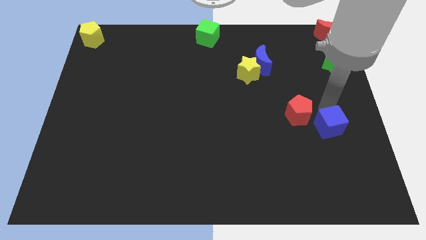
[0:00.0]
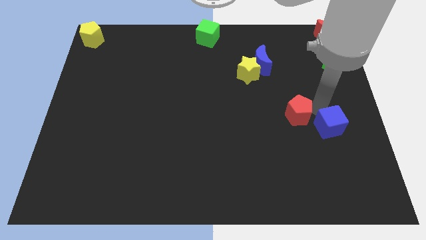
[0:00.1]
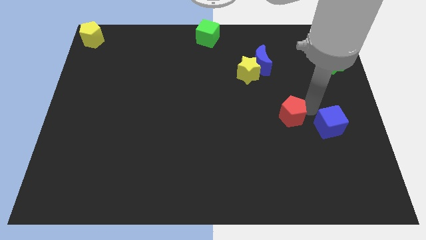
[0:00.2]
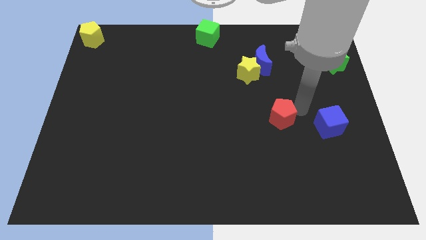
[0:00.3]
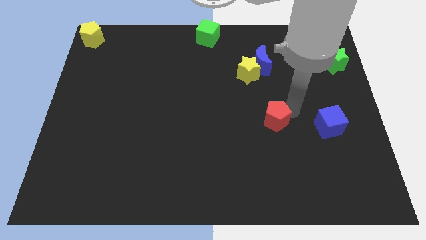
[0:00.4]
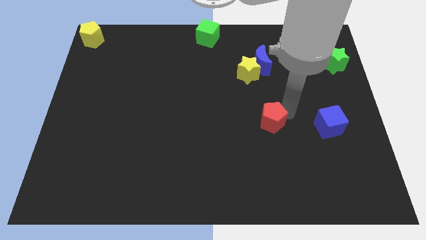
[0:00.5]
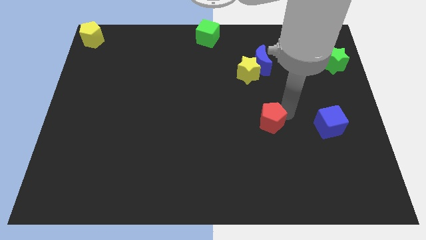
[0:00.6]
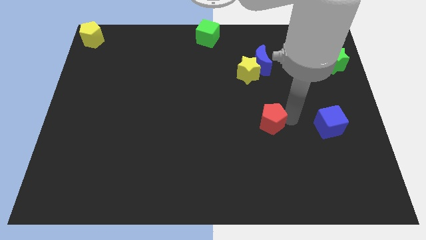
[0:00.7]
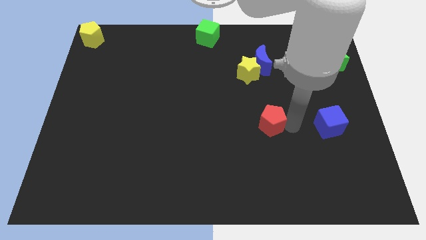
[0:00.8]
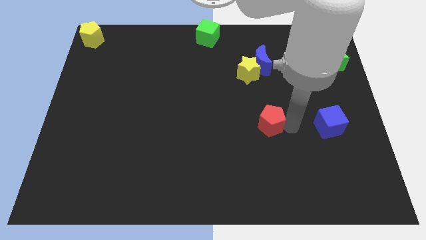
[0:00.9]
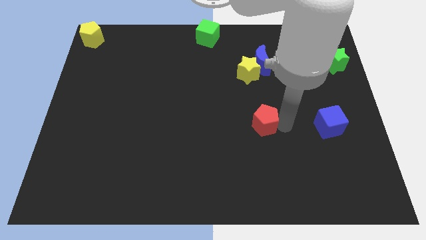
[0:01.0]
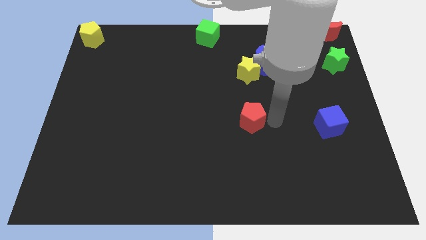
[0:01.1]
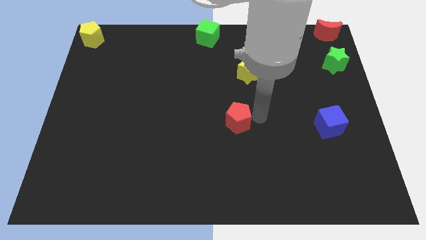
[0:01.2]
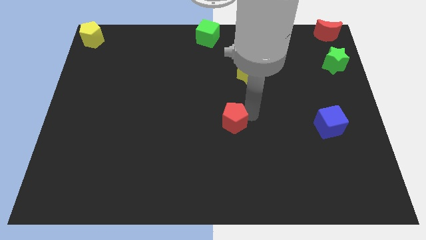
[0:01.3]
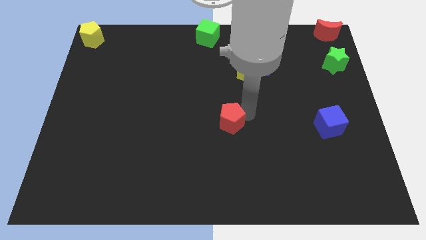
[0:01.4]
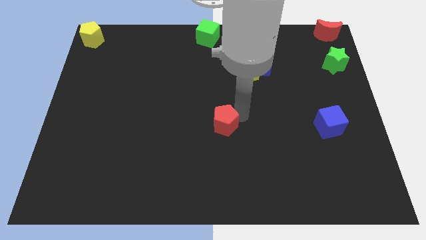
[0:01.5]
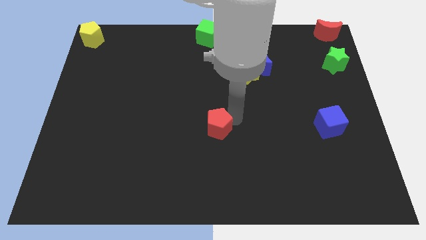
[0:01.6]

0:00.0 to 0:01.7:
place the red pentagon below the yellow star

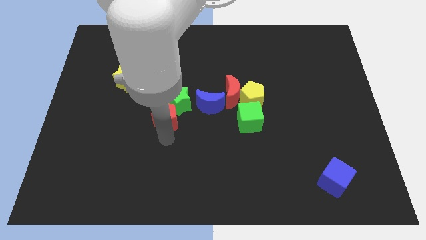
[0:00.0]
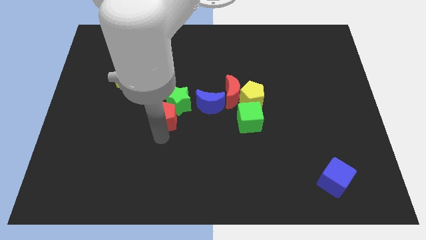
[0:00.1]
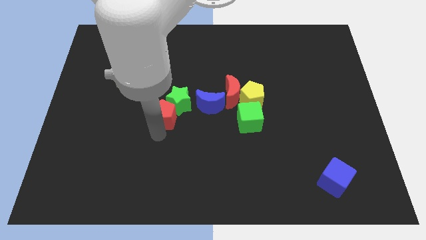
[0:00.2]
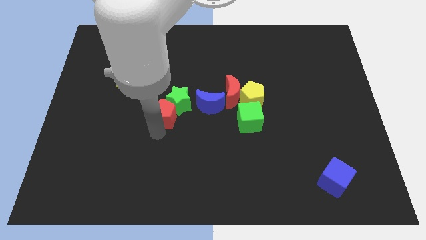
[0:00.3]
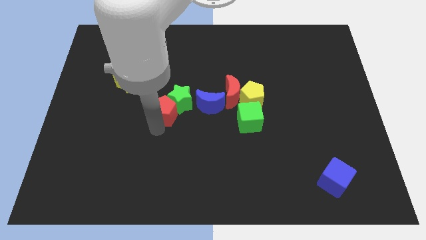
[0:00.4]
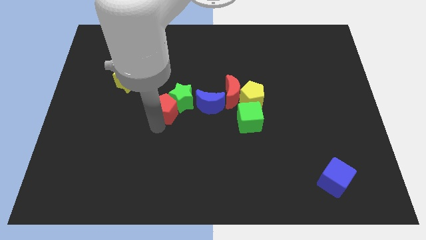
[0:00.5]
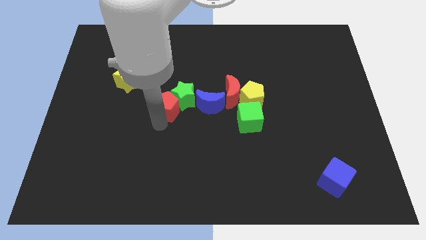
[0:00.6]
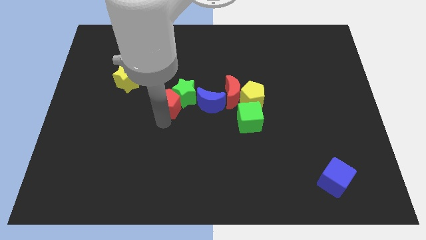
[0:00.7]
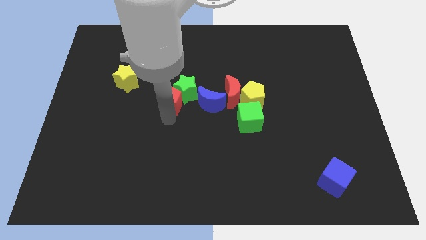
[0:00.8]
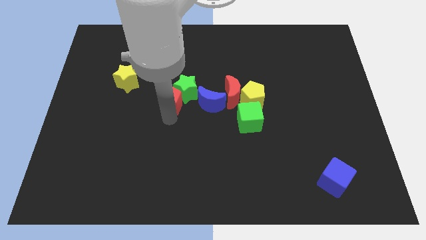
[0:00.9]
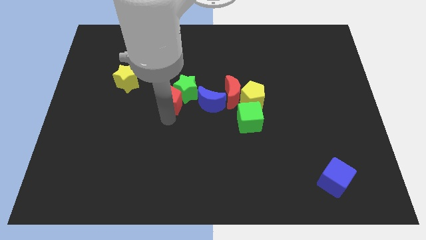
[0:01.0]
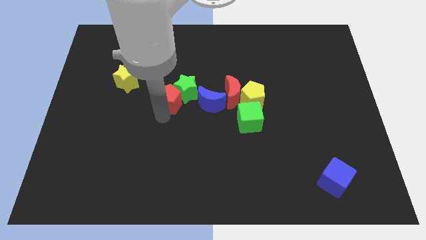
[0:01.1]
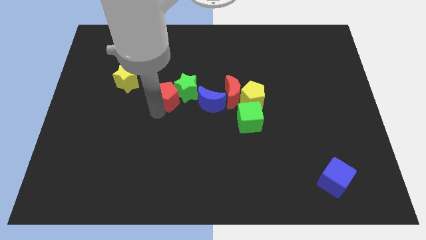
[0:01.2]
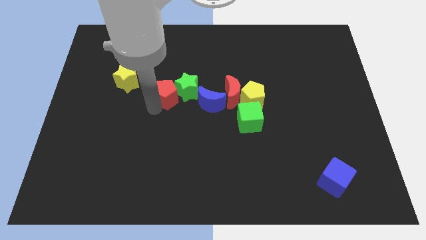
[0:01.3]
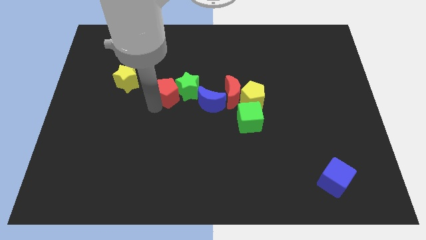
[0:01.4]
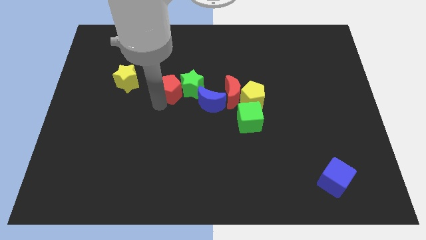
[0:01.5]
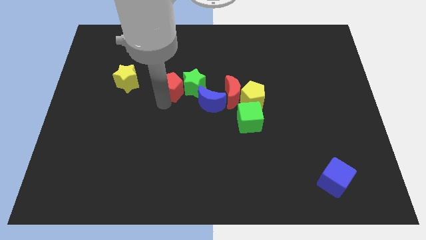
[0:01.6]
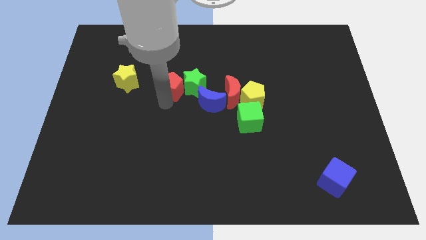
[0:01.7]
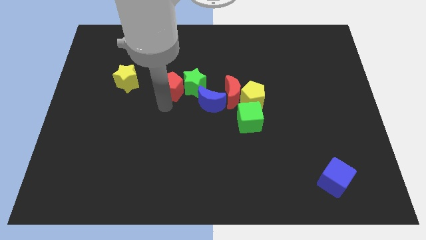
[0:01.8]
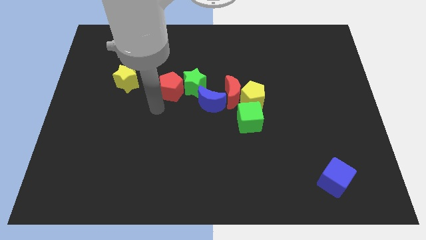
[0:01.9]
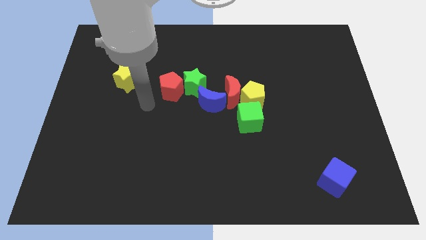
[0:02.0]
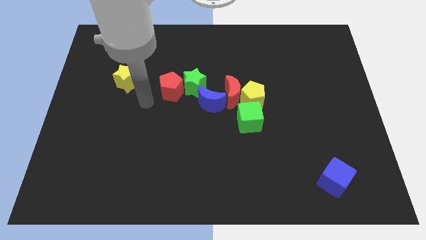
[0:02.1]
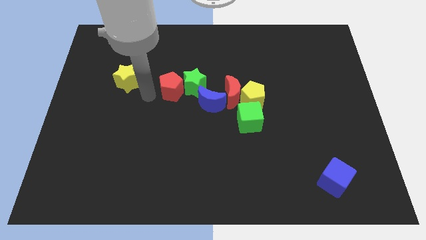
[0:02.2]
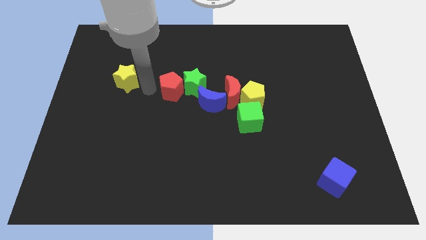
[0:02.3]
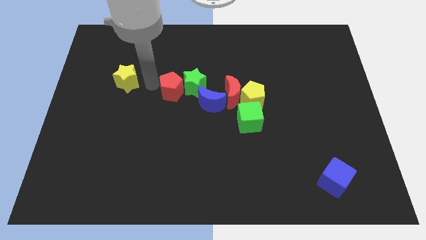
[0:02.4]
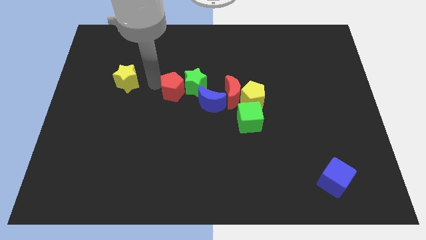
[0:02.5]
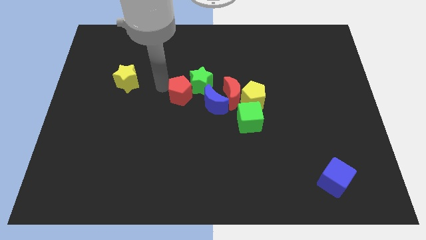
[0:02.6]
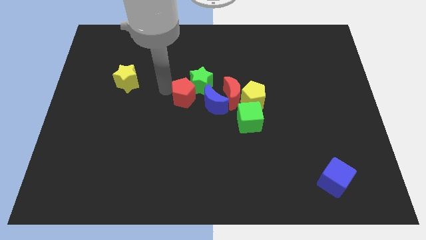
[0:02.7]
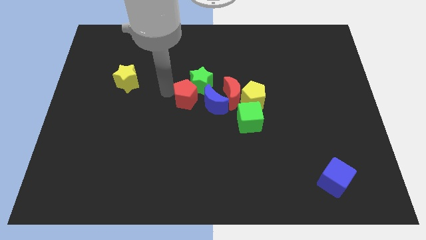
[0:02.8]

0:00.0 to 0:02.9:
push the red pentagon into the group along with the green star from left side

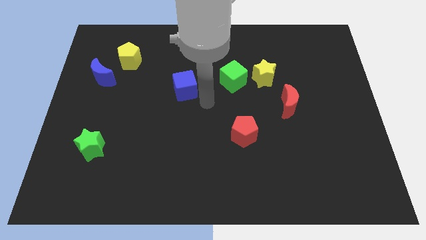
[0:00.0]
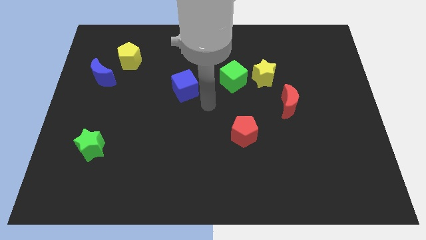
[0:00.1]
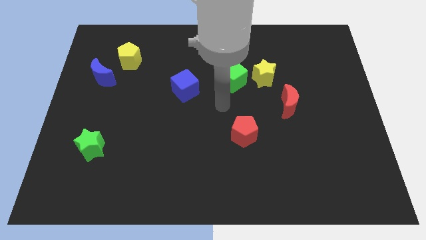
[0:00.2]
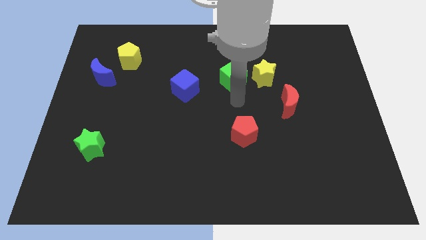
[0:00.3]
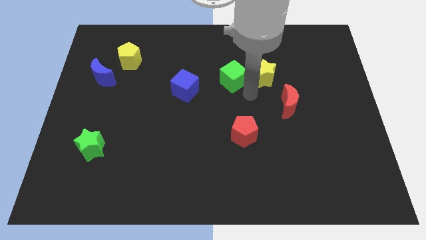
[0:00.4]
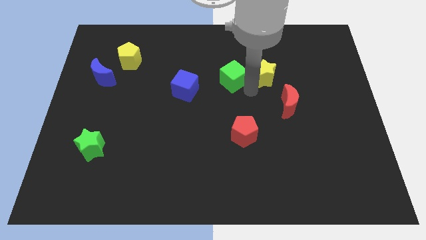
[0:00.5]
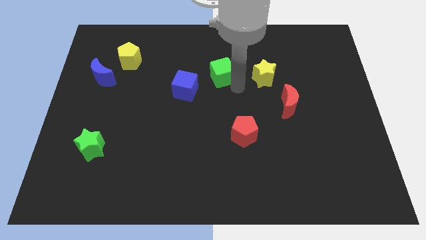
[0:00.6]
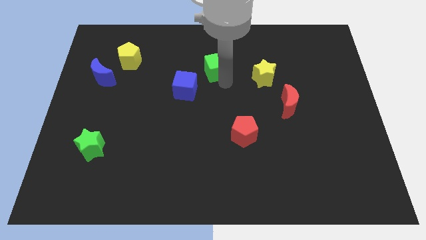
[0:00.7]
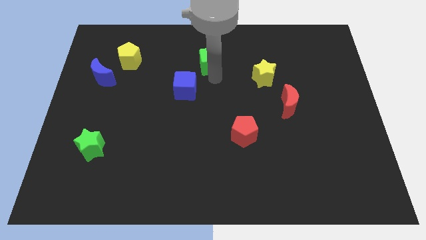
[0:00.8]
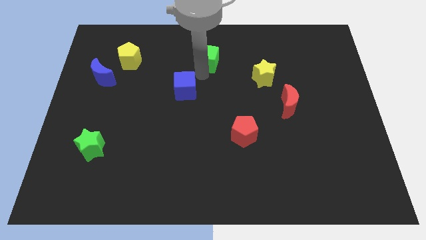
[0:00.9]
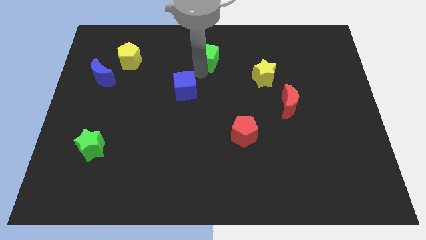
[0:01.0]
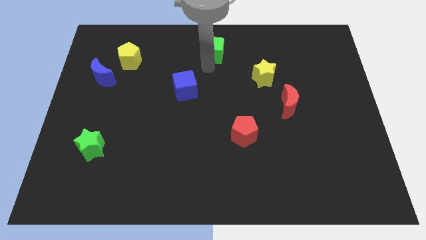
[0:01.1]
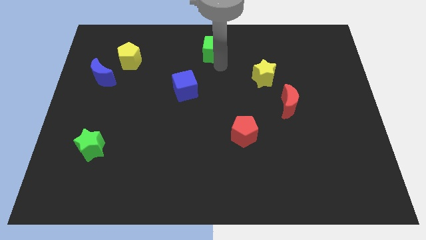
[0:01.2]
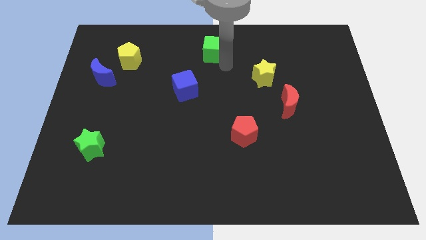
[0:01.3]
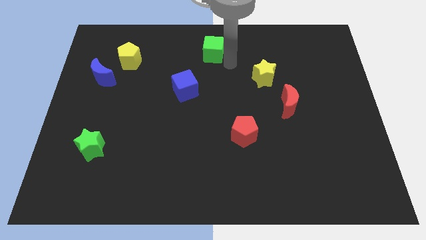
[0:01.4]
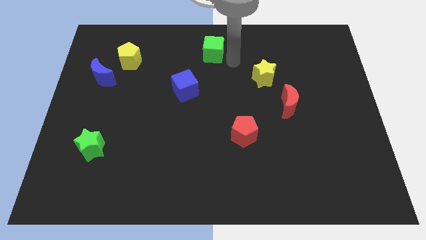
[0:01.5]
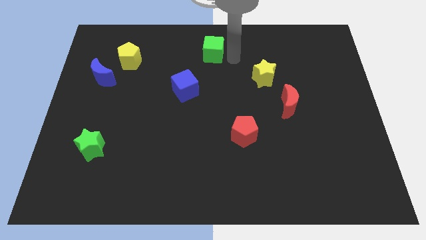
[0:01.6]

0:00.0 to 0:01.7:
push the green cube near to the top center

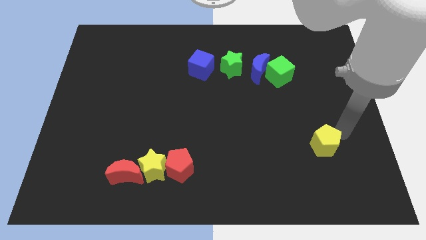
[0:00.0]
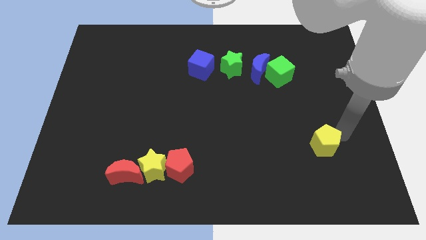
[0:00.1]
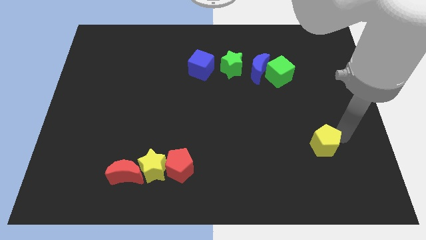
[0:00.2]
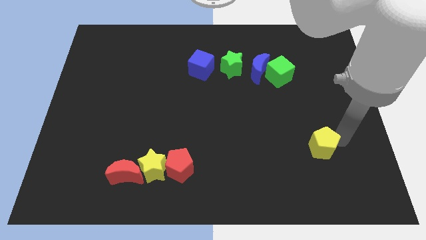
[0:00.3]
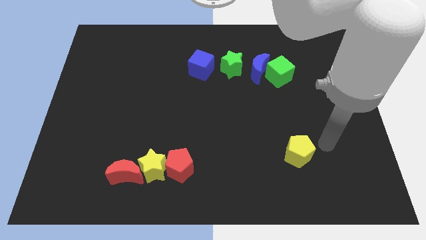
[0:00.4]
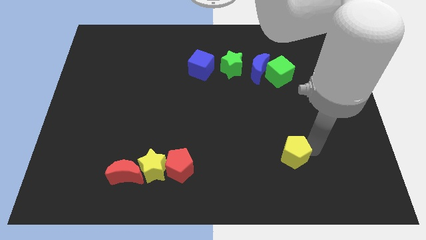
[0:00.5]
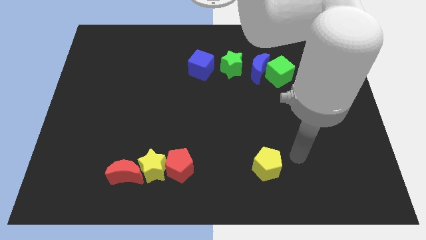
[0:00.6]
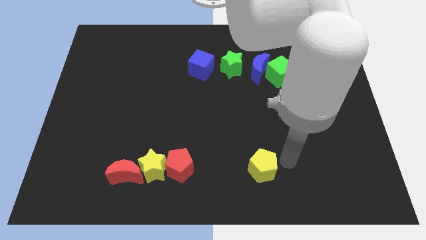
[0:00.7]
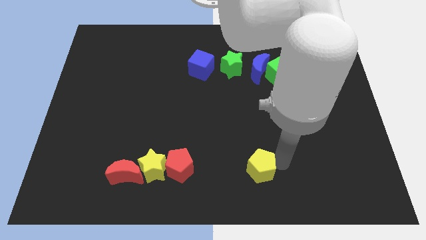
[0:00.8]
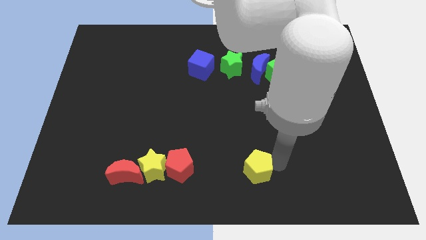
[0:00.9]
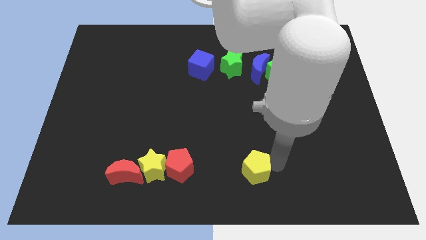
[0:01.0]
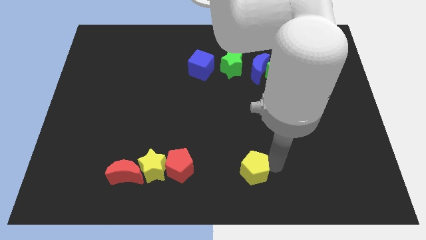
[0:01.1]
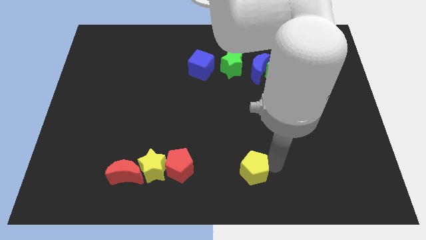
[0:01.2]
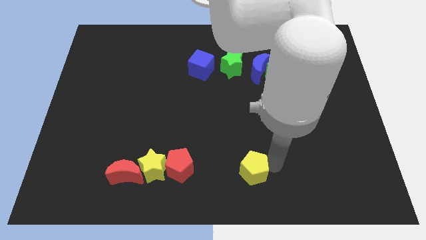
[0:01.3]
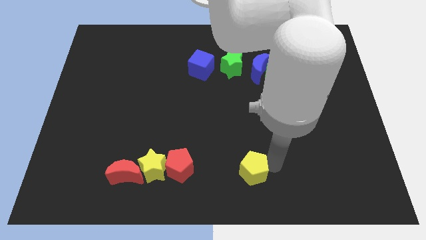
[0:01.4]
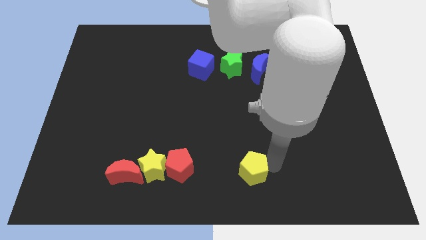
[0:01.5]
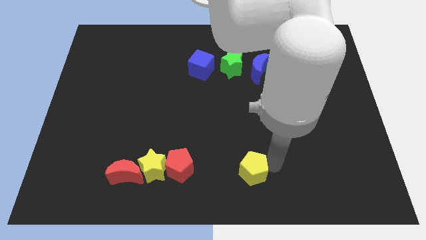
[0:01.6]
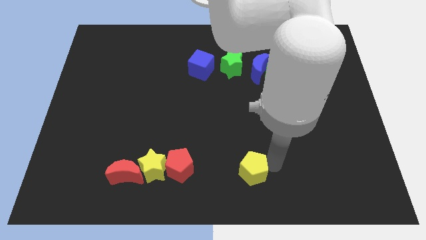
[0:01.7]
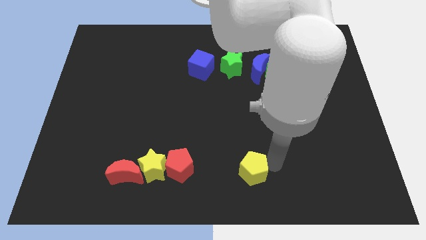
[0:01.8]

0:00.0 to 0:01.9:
push the yellow pentagon slightly to the bottom left

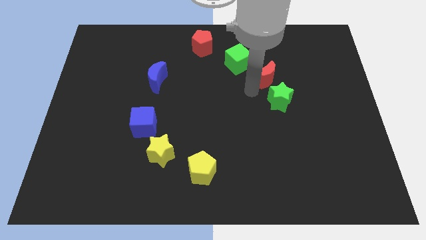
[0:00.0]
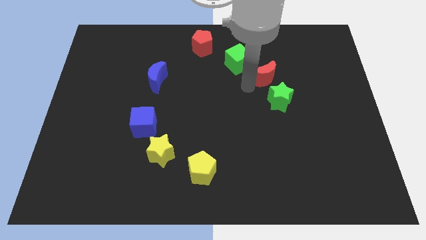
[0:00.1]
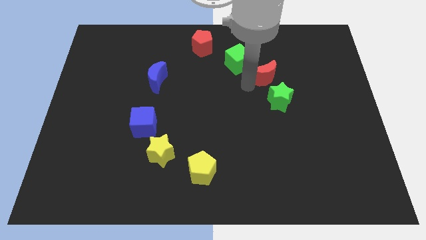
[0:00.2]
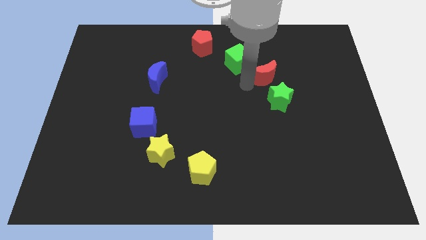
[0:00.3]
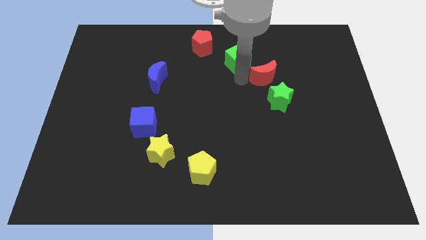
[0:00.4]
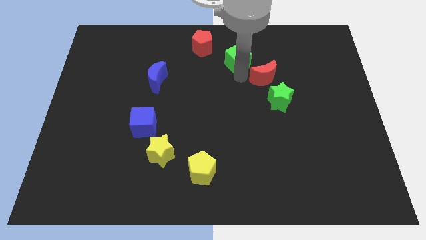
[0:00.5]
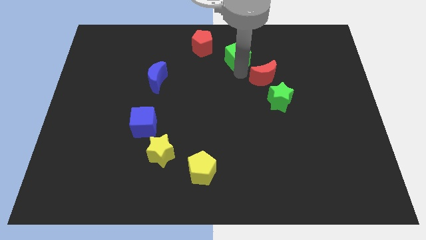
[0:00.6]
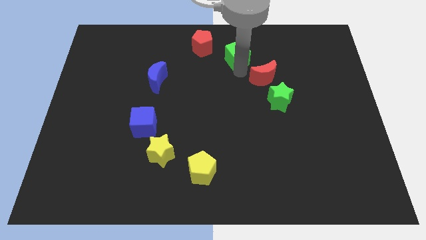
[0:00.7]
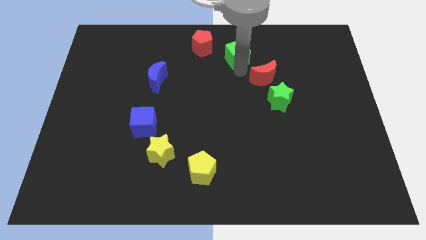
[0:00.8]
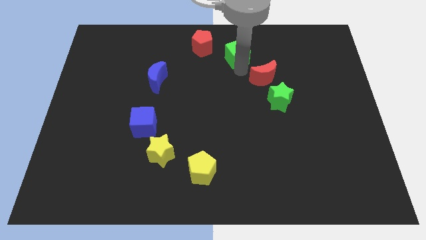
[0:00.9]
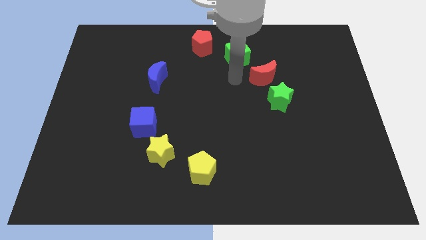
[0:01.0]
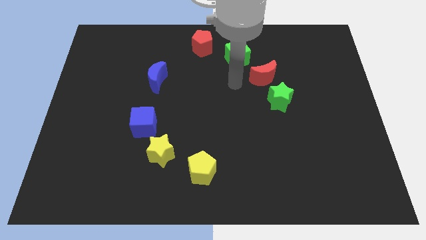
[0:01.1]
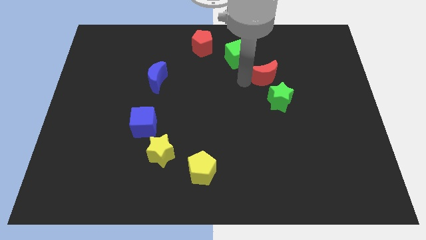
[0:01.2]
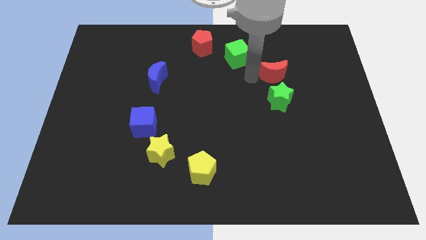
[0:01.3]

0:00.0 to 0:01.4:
slightly push the green cube upward
